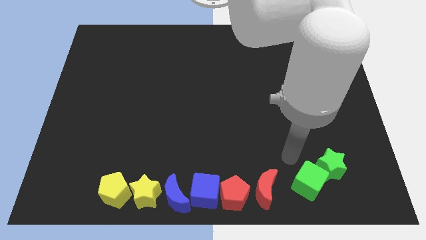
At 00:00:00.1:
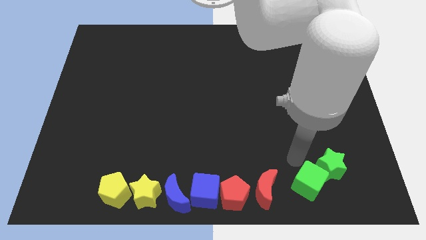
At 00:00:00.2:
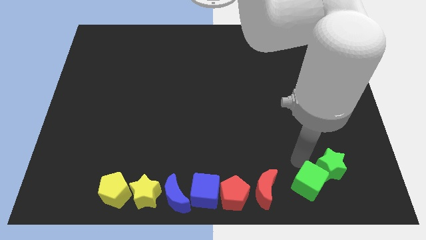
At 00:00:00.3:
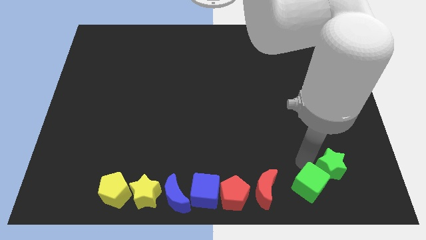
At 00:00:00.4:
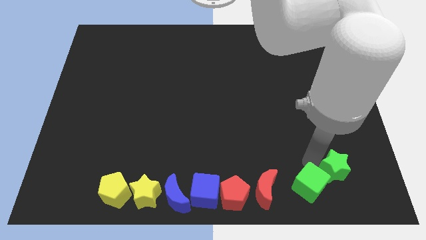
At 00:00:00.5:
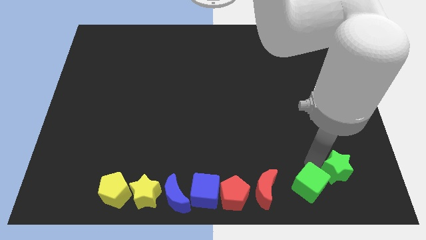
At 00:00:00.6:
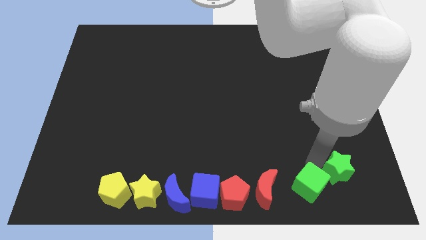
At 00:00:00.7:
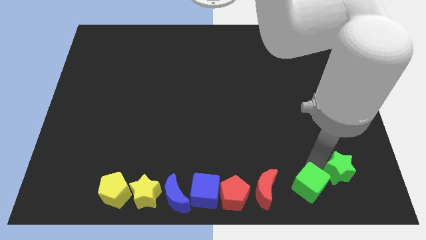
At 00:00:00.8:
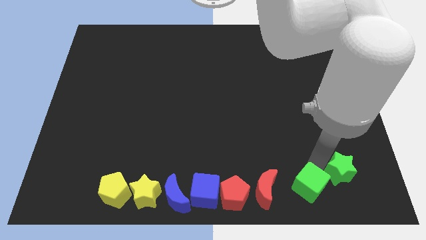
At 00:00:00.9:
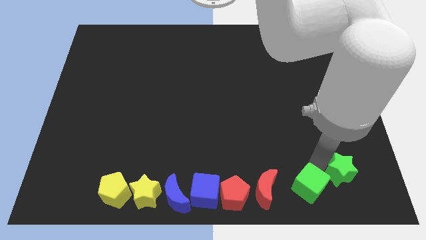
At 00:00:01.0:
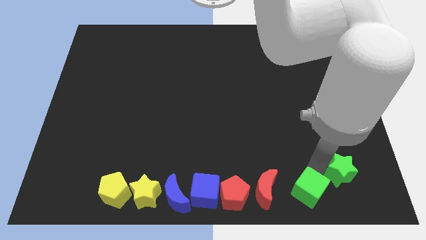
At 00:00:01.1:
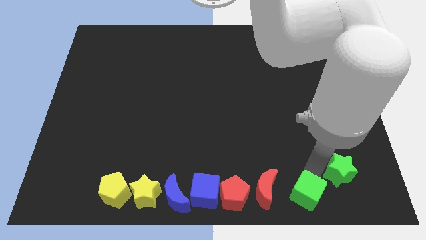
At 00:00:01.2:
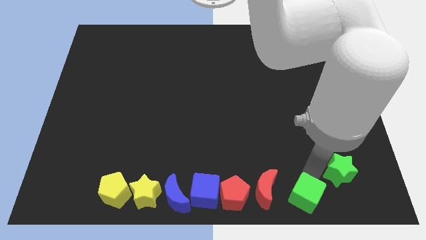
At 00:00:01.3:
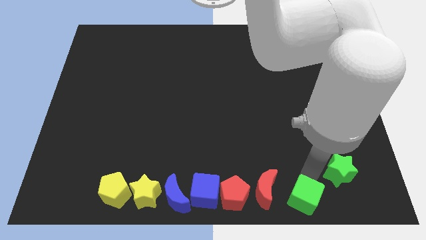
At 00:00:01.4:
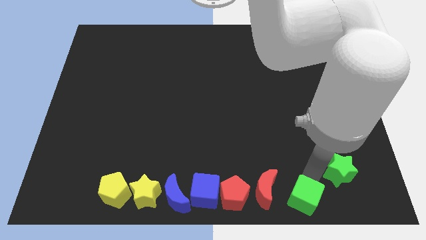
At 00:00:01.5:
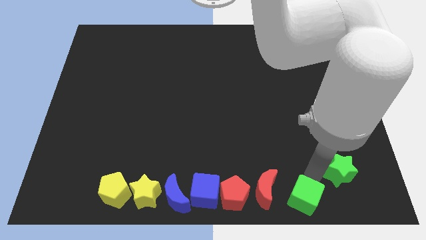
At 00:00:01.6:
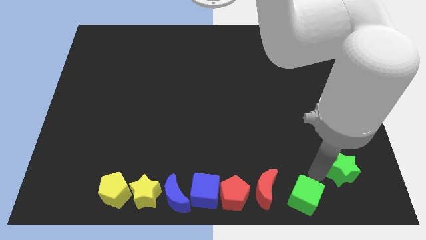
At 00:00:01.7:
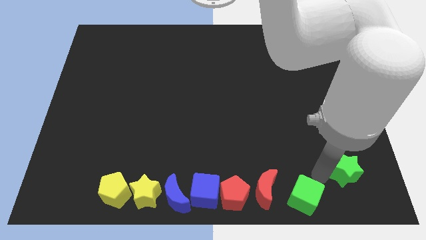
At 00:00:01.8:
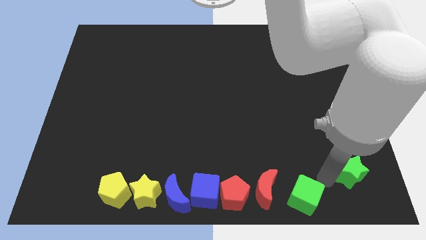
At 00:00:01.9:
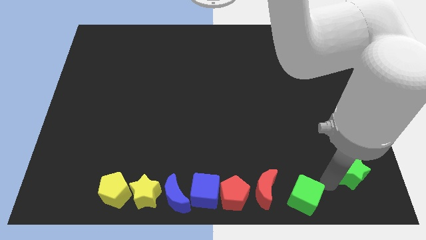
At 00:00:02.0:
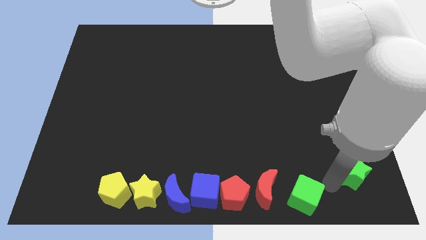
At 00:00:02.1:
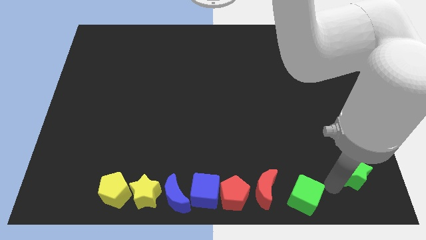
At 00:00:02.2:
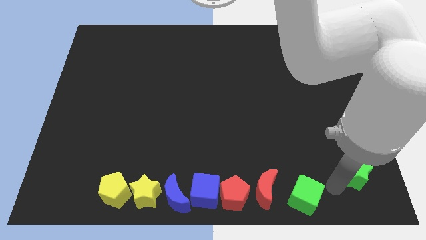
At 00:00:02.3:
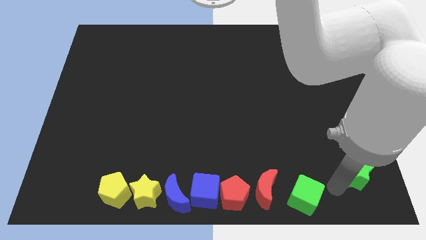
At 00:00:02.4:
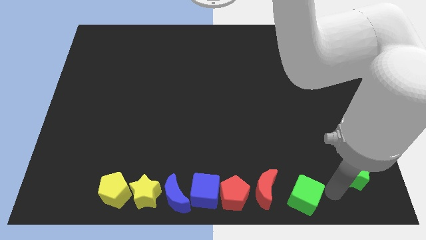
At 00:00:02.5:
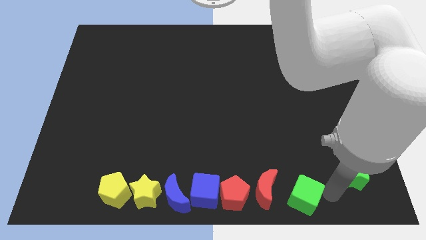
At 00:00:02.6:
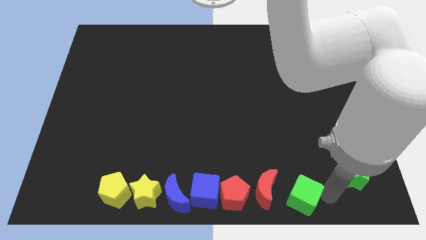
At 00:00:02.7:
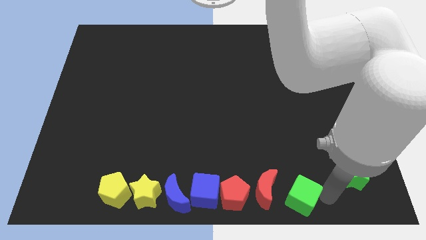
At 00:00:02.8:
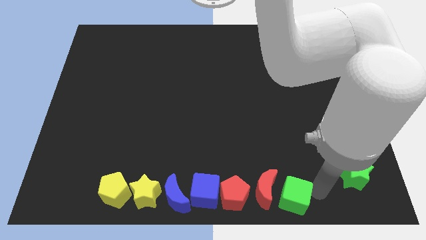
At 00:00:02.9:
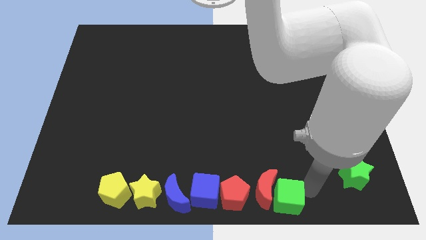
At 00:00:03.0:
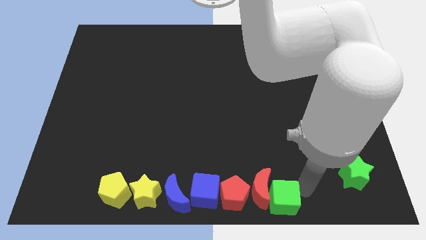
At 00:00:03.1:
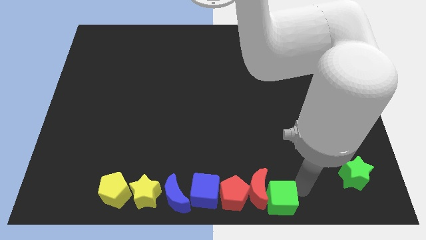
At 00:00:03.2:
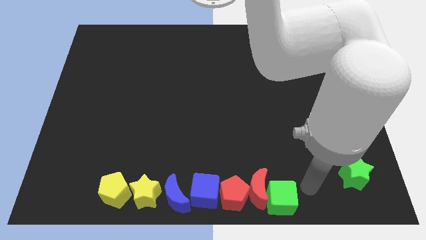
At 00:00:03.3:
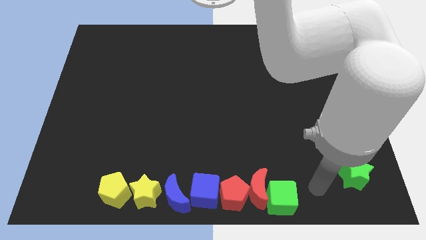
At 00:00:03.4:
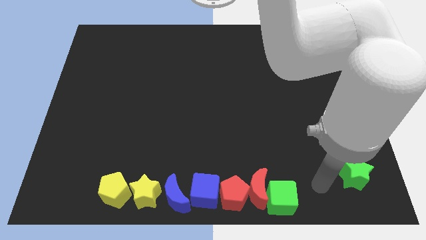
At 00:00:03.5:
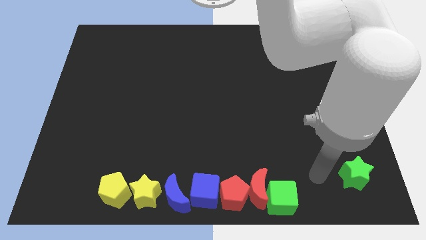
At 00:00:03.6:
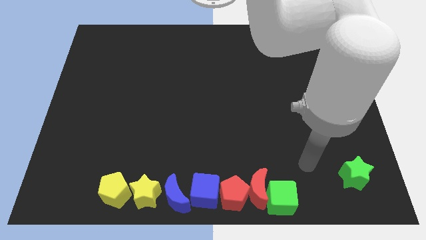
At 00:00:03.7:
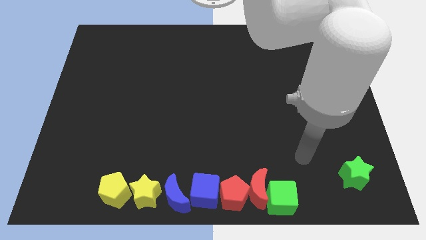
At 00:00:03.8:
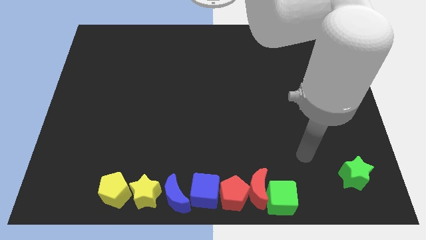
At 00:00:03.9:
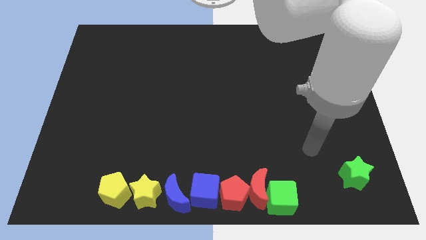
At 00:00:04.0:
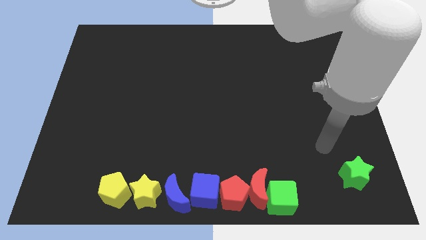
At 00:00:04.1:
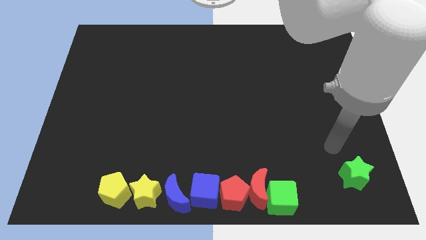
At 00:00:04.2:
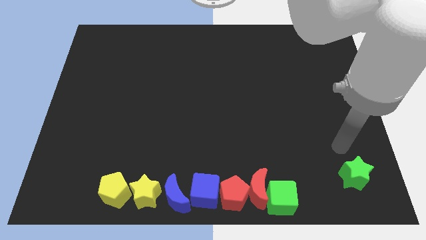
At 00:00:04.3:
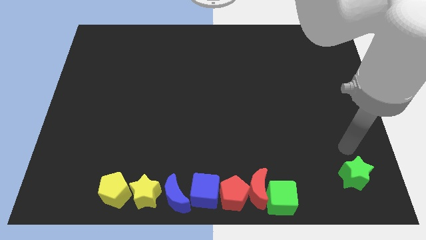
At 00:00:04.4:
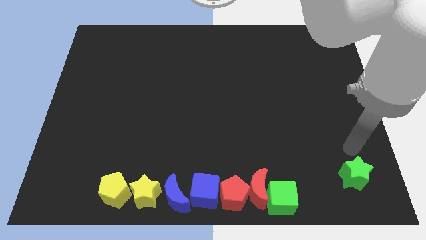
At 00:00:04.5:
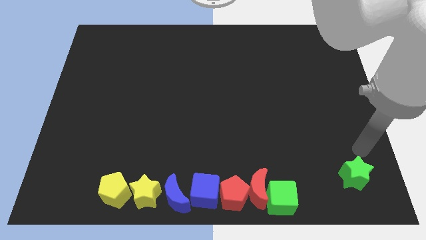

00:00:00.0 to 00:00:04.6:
push the green cube into the red moon

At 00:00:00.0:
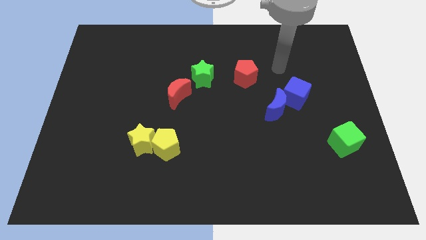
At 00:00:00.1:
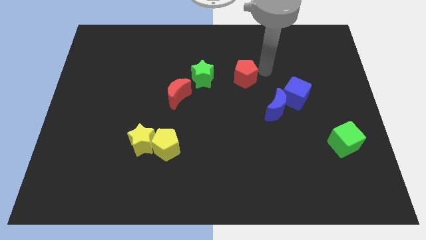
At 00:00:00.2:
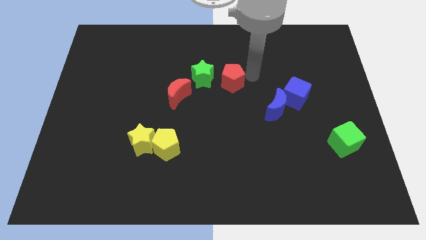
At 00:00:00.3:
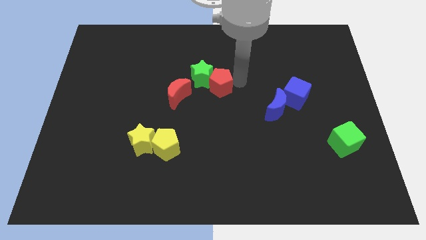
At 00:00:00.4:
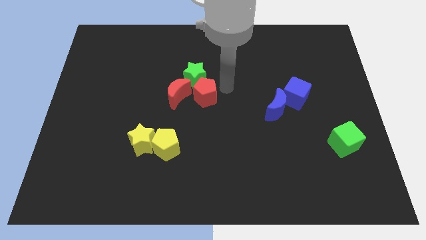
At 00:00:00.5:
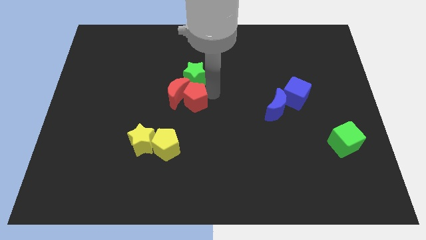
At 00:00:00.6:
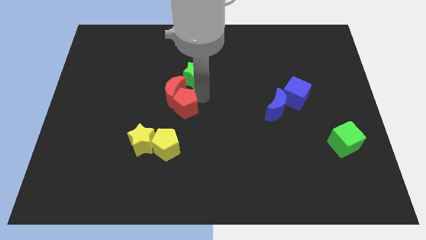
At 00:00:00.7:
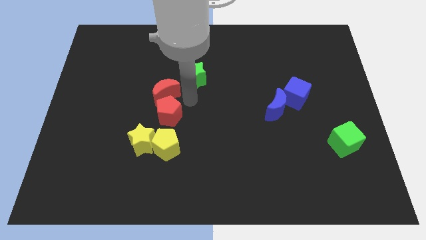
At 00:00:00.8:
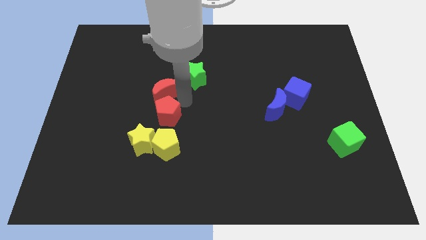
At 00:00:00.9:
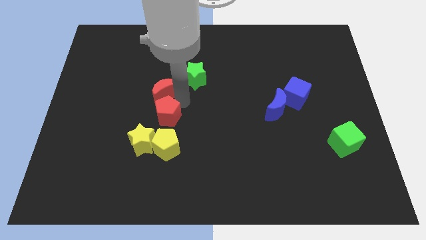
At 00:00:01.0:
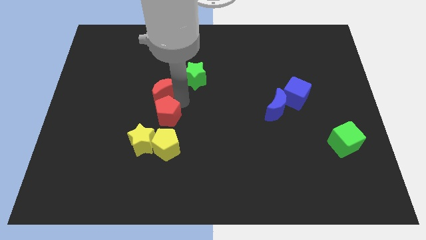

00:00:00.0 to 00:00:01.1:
move the red pentagon into the red moon

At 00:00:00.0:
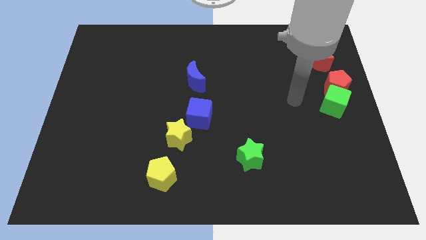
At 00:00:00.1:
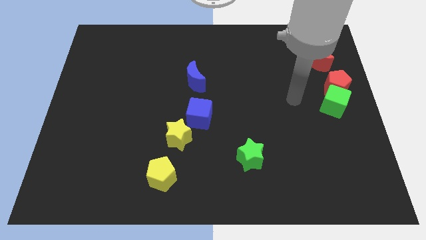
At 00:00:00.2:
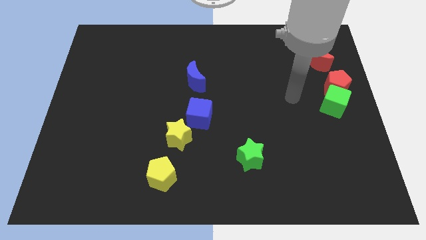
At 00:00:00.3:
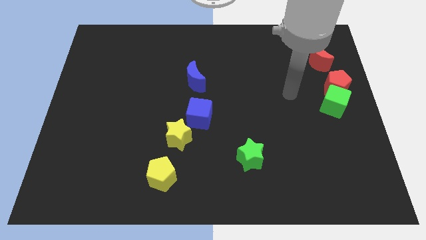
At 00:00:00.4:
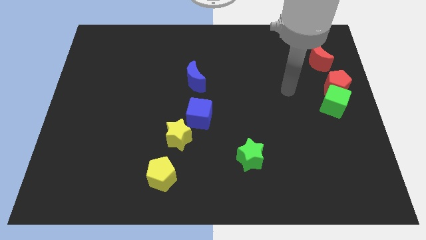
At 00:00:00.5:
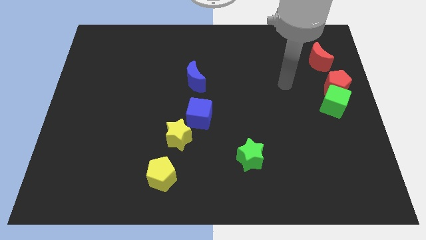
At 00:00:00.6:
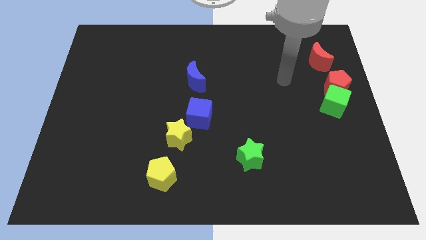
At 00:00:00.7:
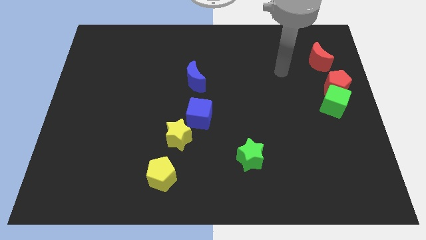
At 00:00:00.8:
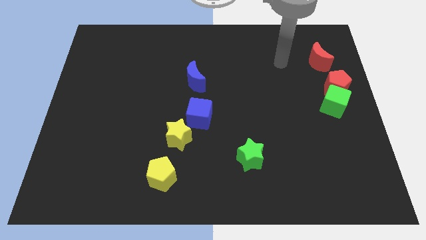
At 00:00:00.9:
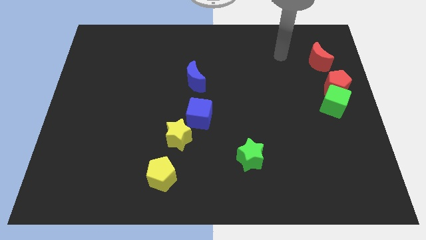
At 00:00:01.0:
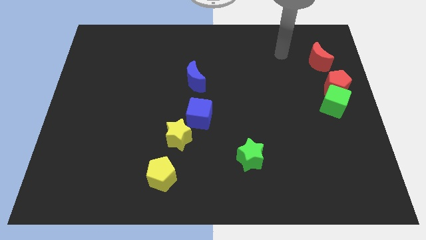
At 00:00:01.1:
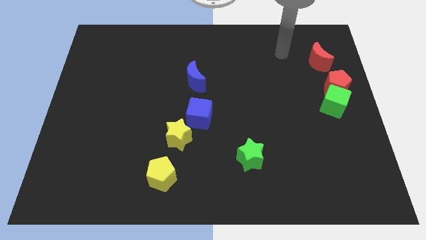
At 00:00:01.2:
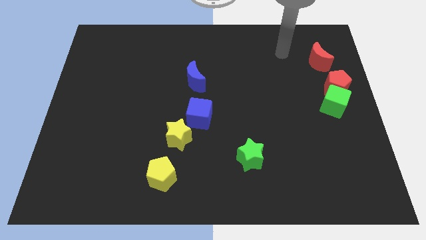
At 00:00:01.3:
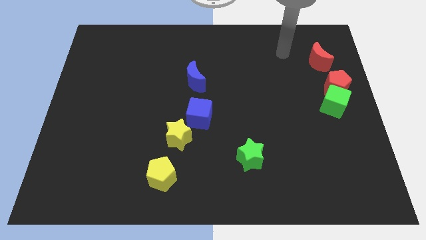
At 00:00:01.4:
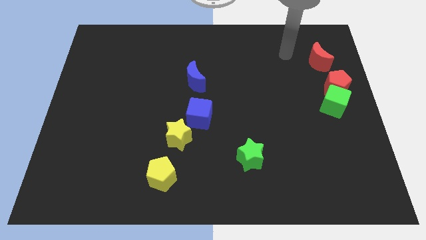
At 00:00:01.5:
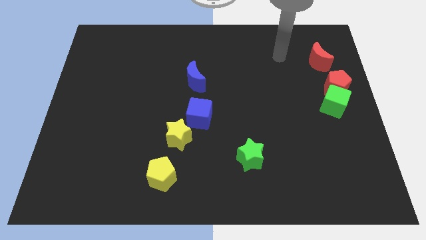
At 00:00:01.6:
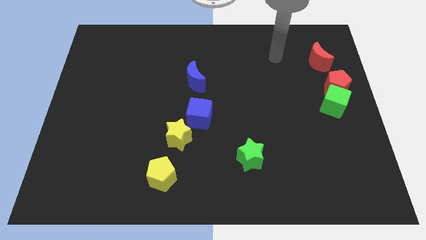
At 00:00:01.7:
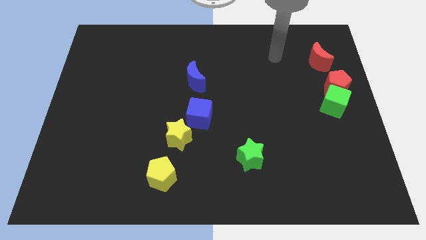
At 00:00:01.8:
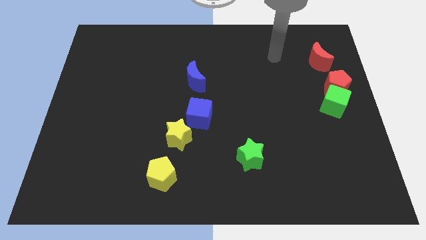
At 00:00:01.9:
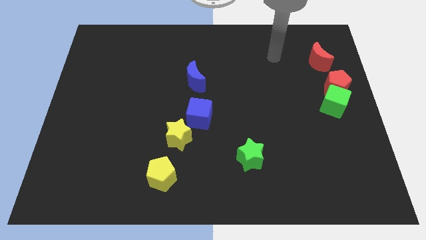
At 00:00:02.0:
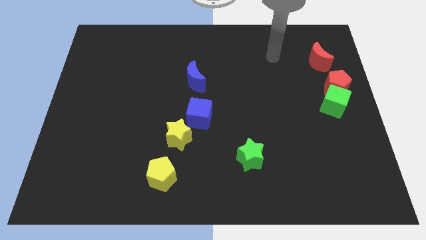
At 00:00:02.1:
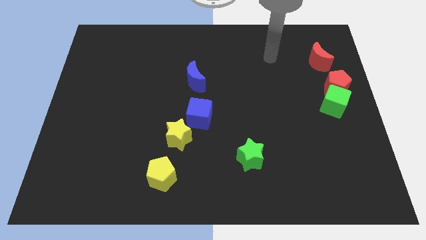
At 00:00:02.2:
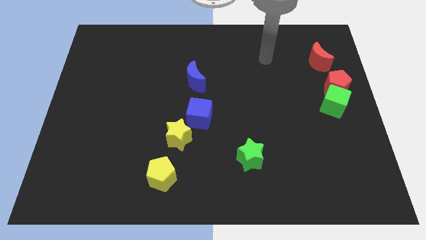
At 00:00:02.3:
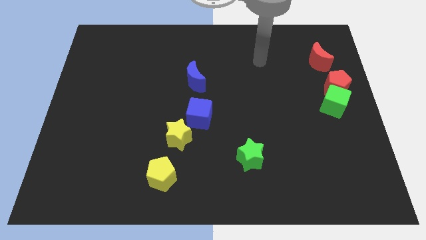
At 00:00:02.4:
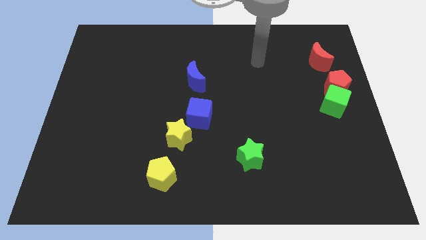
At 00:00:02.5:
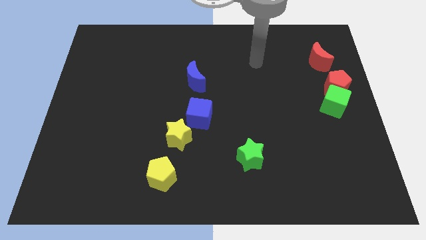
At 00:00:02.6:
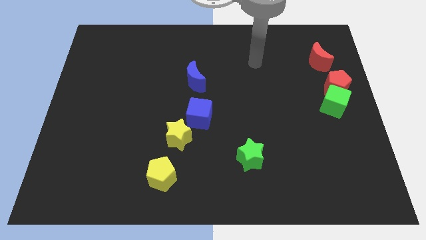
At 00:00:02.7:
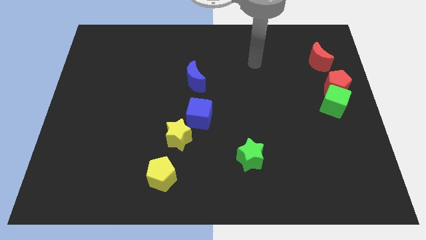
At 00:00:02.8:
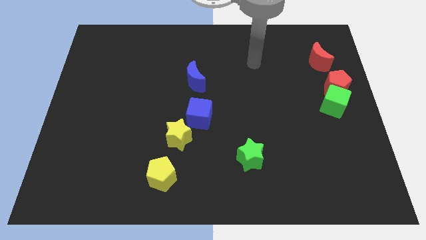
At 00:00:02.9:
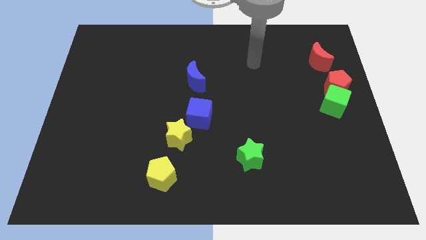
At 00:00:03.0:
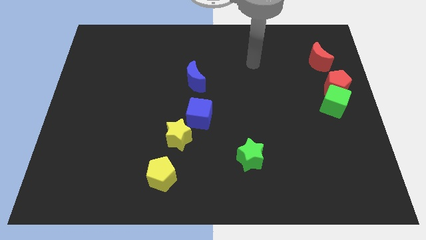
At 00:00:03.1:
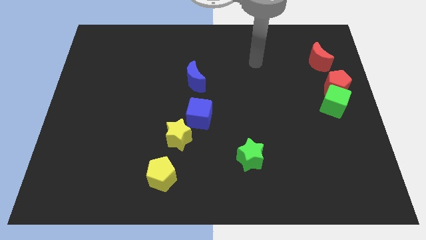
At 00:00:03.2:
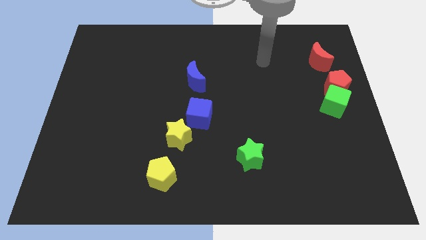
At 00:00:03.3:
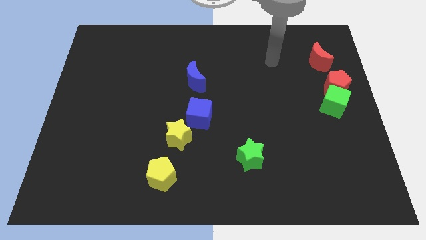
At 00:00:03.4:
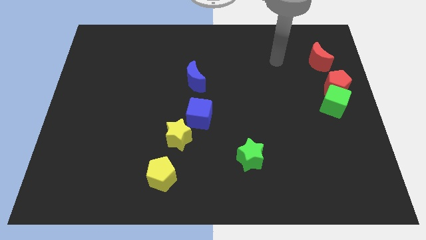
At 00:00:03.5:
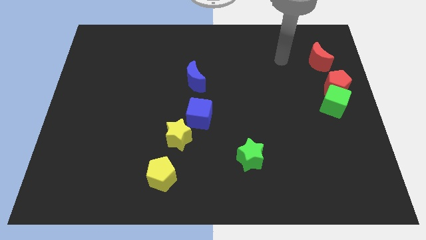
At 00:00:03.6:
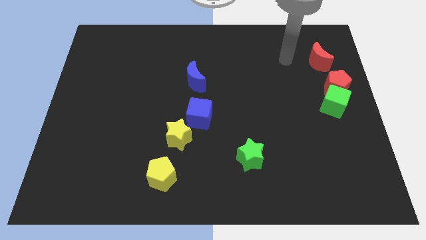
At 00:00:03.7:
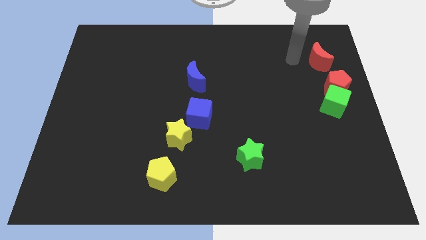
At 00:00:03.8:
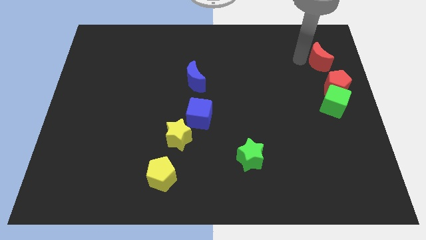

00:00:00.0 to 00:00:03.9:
point your arm at the left side of the red moon
